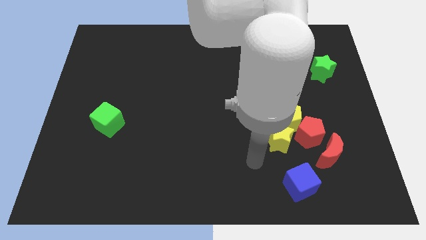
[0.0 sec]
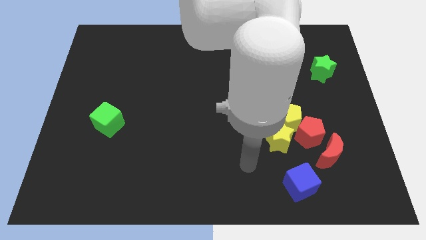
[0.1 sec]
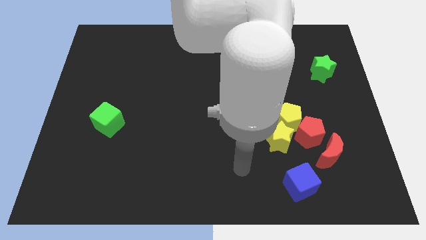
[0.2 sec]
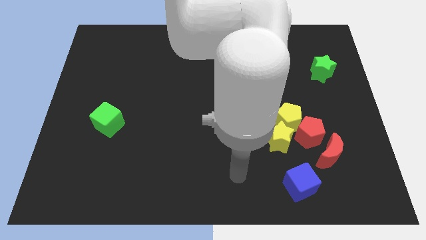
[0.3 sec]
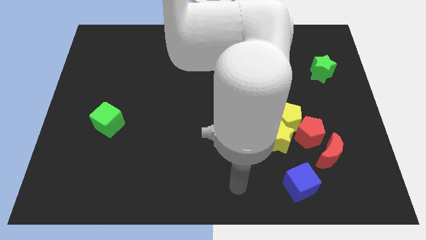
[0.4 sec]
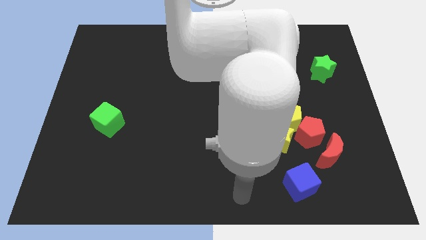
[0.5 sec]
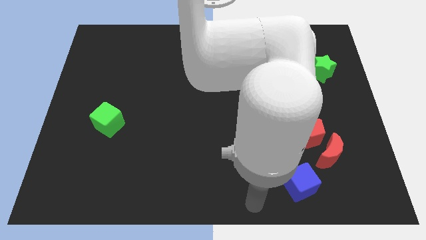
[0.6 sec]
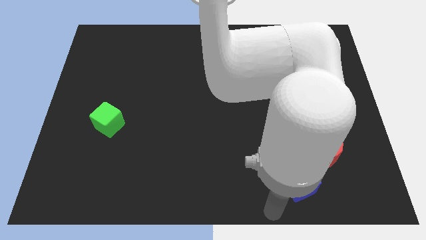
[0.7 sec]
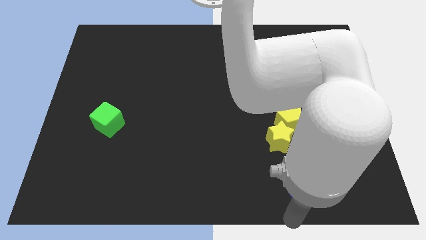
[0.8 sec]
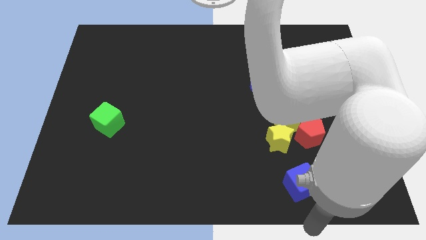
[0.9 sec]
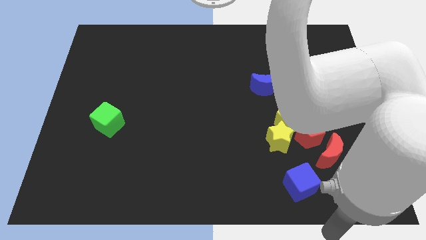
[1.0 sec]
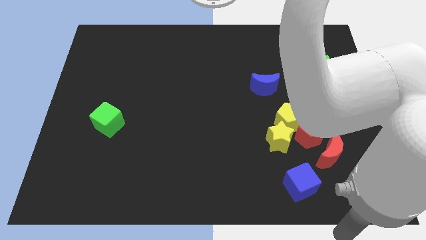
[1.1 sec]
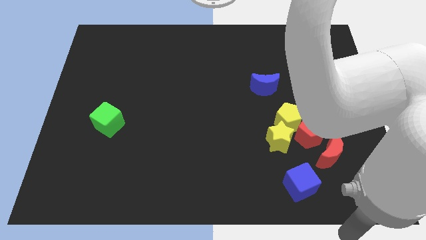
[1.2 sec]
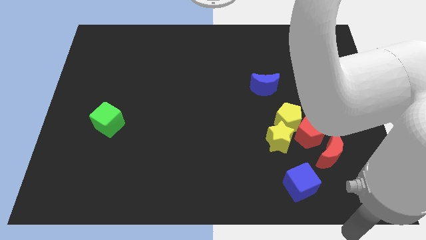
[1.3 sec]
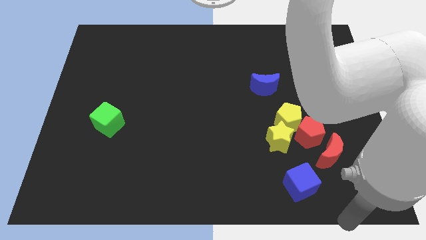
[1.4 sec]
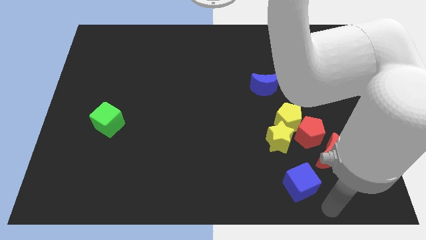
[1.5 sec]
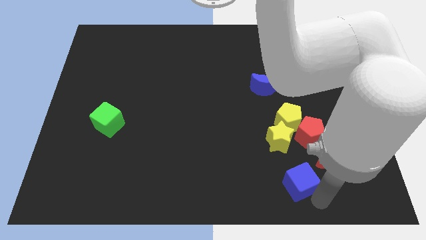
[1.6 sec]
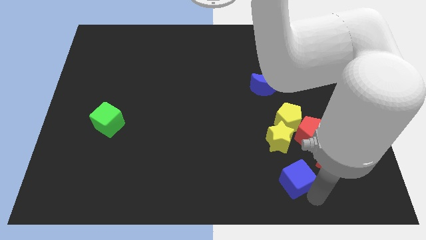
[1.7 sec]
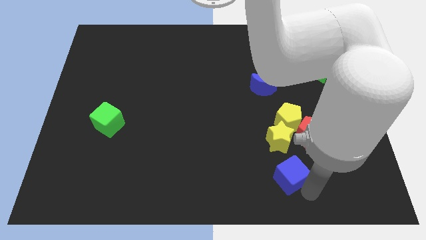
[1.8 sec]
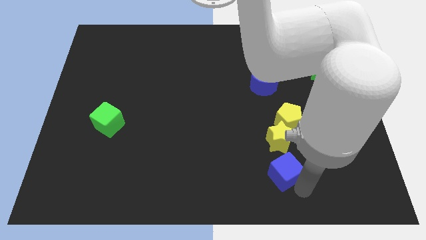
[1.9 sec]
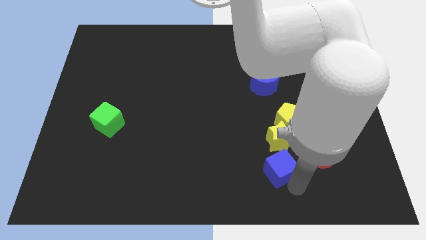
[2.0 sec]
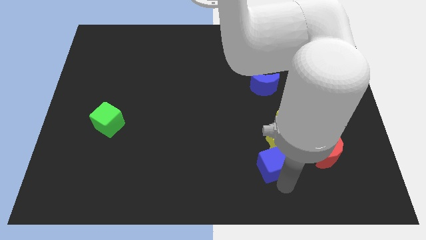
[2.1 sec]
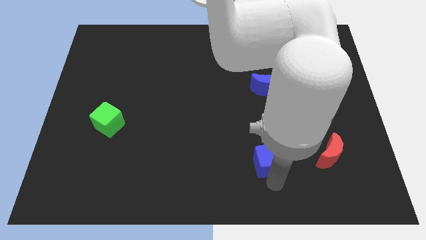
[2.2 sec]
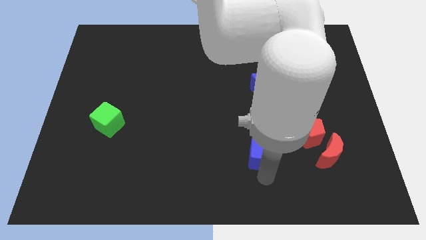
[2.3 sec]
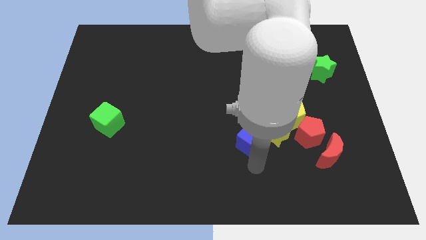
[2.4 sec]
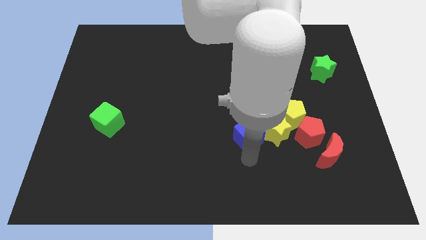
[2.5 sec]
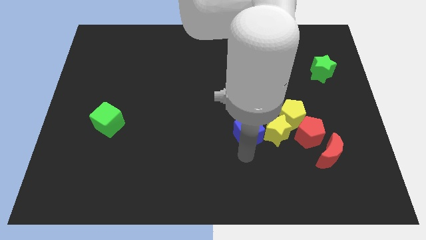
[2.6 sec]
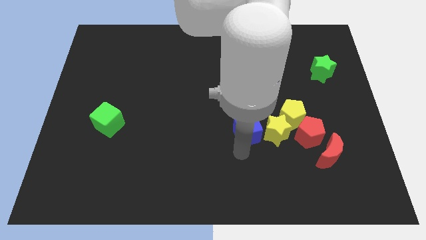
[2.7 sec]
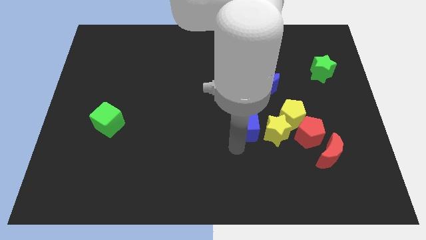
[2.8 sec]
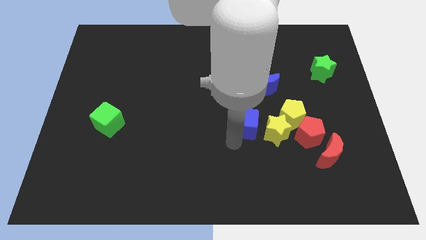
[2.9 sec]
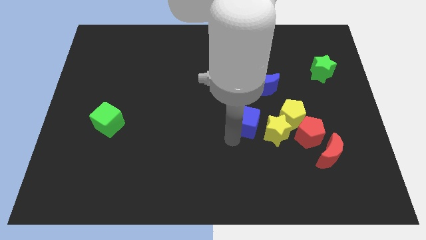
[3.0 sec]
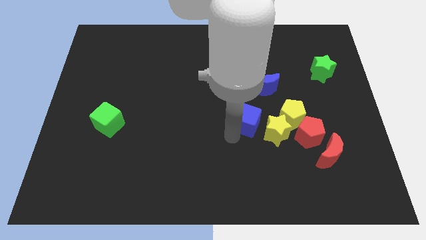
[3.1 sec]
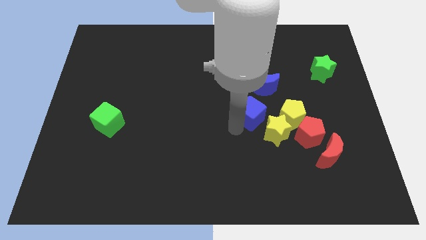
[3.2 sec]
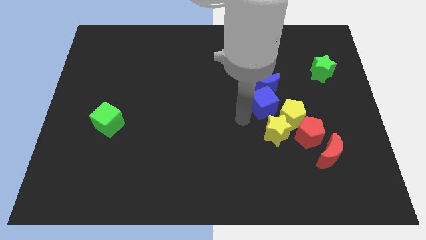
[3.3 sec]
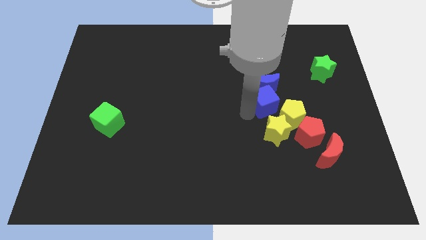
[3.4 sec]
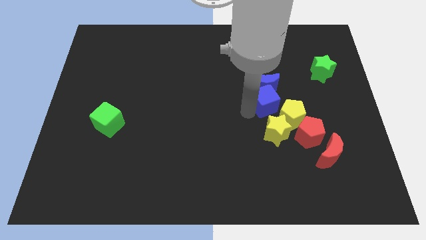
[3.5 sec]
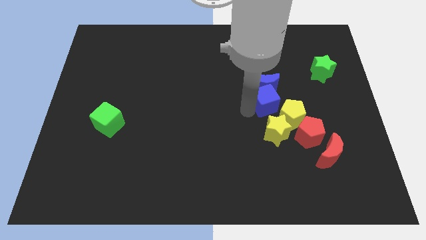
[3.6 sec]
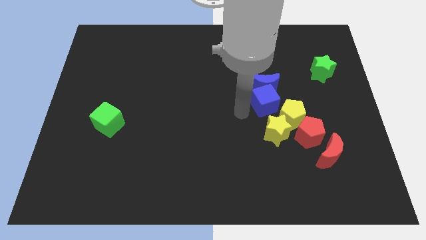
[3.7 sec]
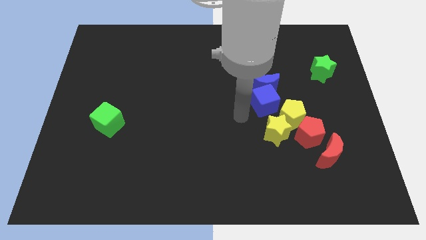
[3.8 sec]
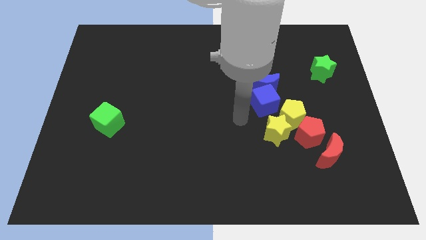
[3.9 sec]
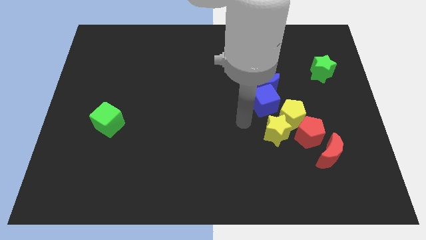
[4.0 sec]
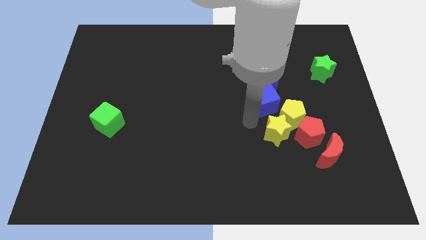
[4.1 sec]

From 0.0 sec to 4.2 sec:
place the blue cube below the blue crescent

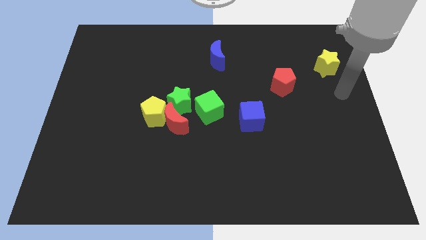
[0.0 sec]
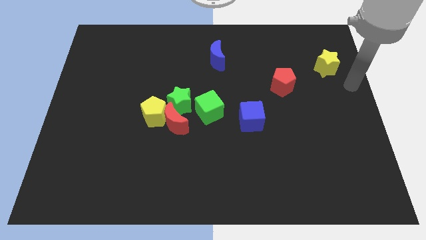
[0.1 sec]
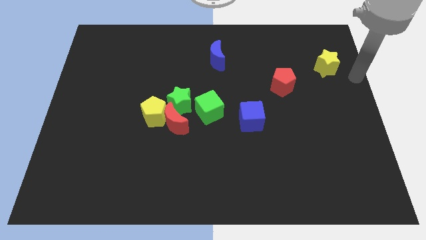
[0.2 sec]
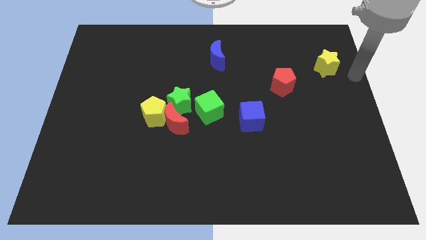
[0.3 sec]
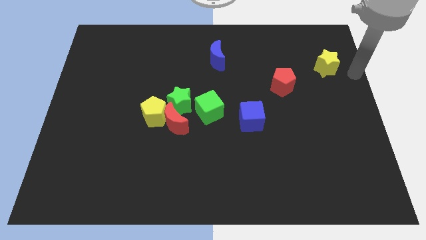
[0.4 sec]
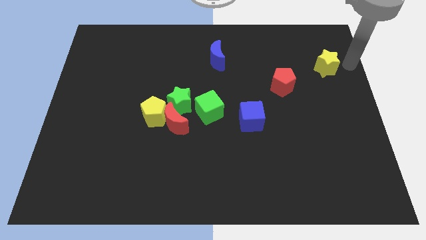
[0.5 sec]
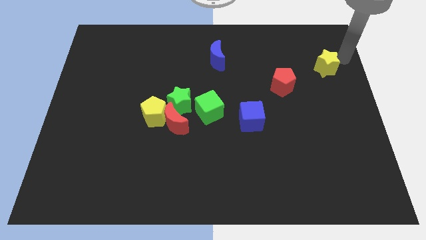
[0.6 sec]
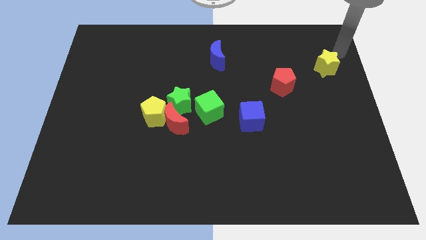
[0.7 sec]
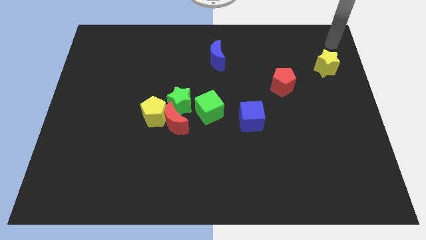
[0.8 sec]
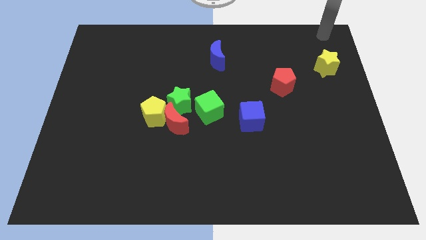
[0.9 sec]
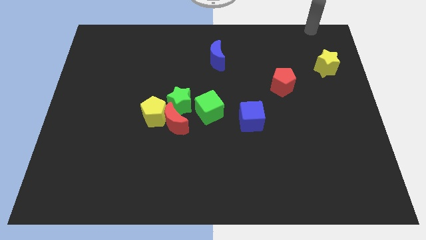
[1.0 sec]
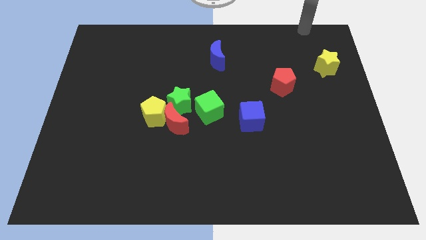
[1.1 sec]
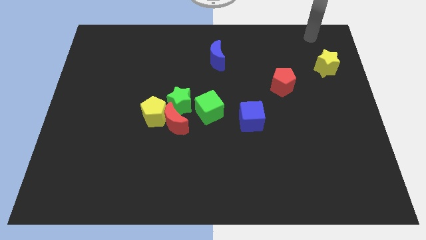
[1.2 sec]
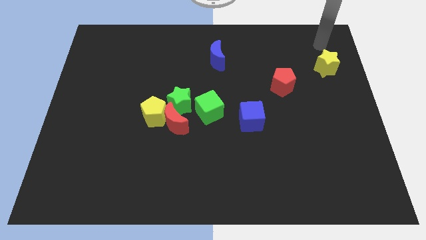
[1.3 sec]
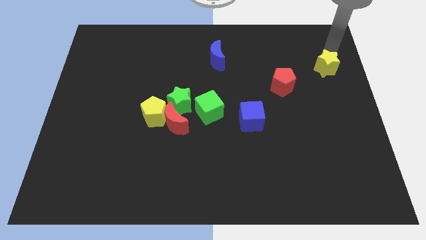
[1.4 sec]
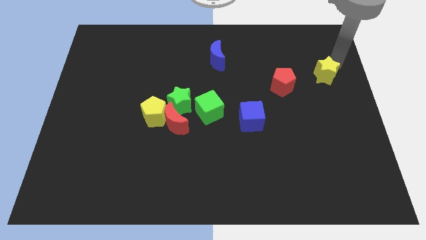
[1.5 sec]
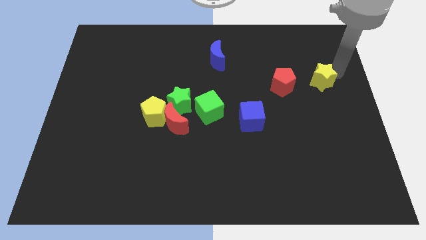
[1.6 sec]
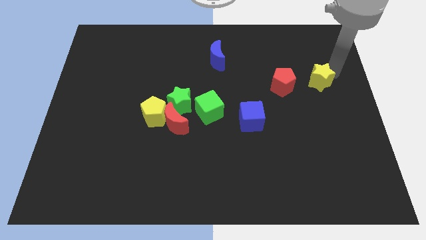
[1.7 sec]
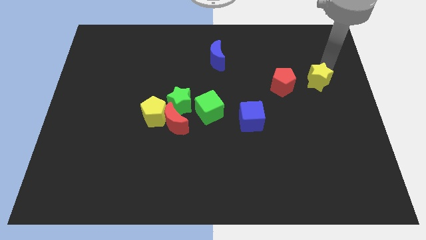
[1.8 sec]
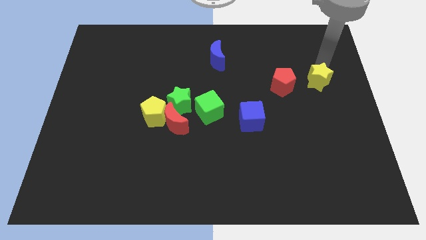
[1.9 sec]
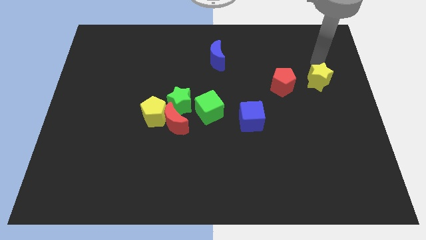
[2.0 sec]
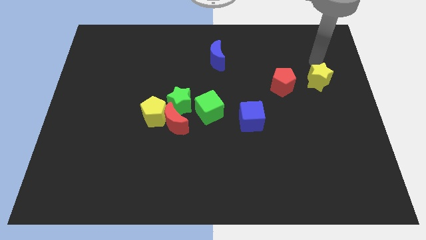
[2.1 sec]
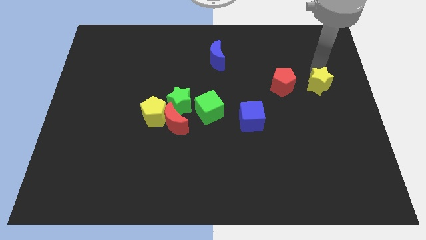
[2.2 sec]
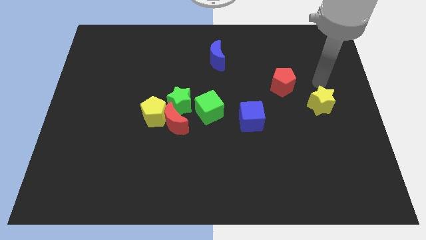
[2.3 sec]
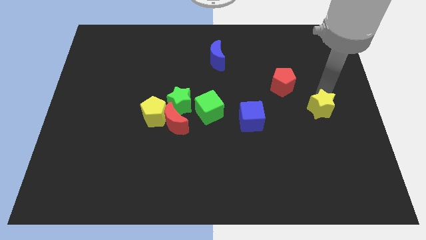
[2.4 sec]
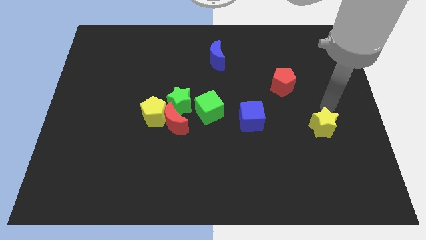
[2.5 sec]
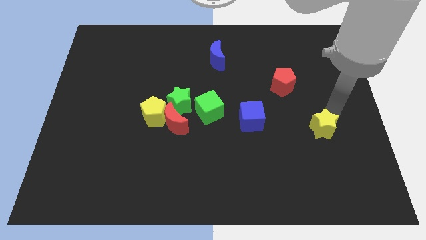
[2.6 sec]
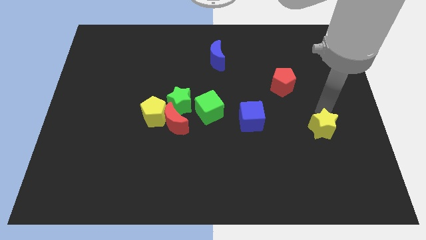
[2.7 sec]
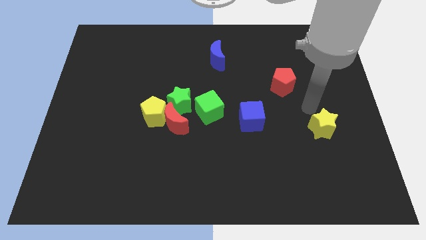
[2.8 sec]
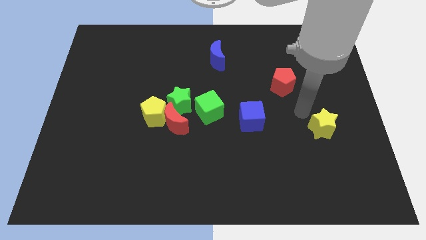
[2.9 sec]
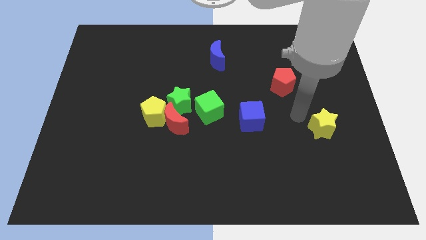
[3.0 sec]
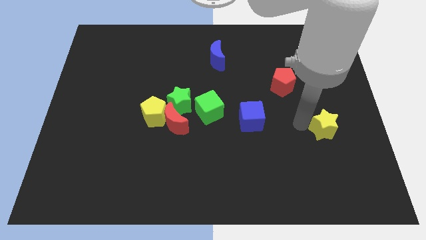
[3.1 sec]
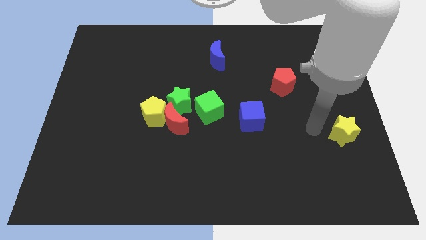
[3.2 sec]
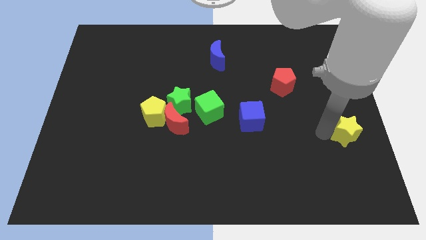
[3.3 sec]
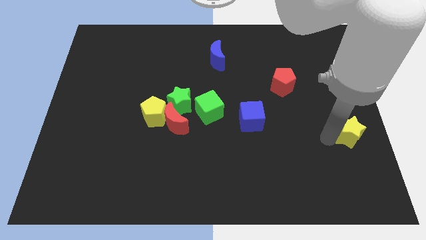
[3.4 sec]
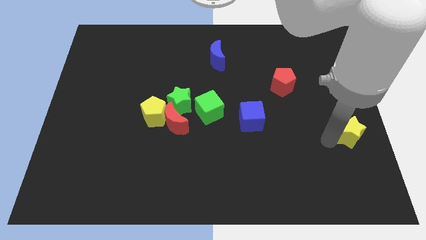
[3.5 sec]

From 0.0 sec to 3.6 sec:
push the yellow star towards the center right of the board

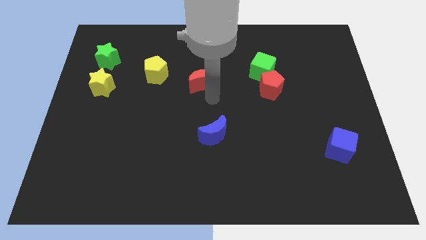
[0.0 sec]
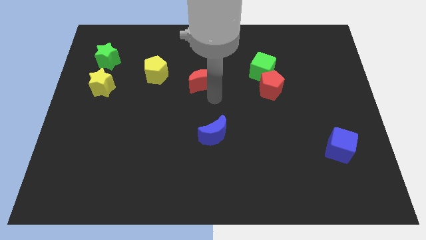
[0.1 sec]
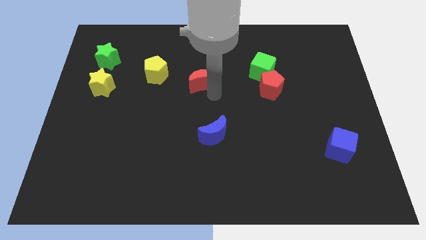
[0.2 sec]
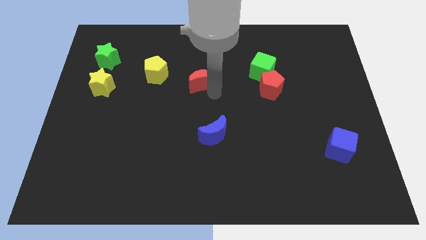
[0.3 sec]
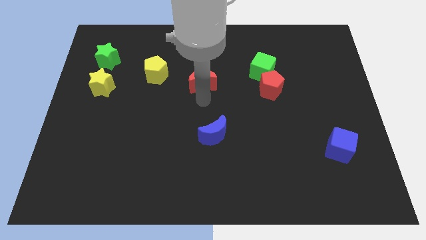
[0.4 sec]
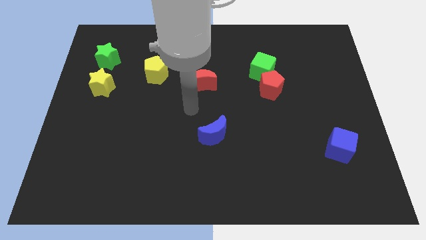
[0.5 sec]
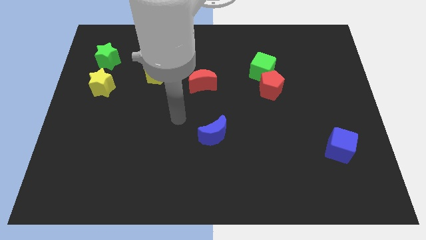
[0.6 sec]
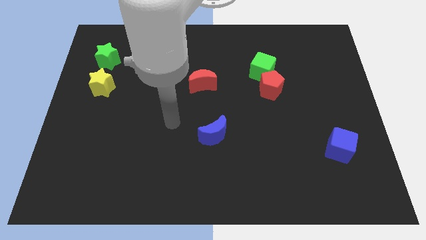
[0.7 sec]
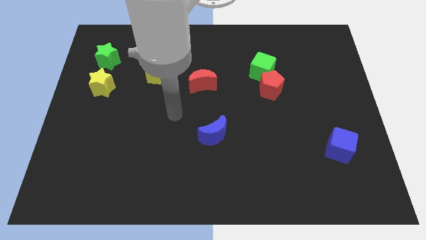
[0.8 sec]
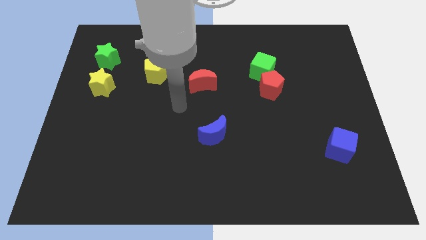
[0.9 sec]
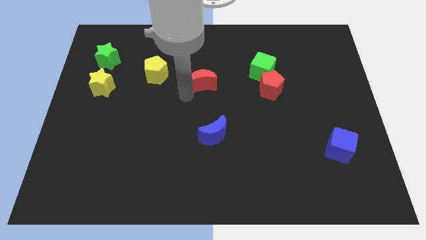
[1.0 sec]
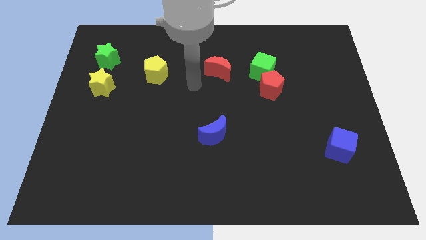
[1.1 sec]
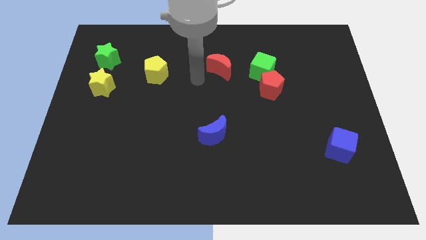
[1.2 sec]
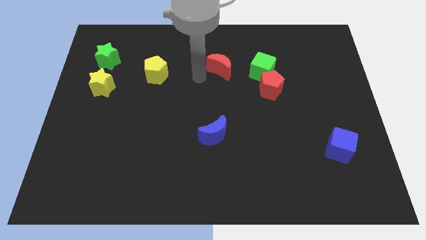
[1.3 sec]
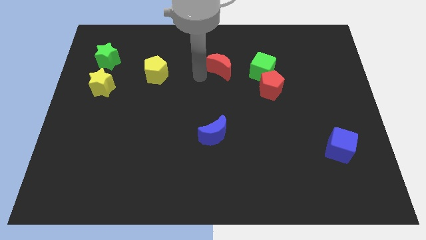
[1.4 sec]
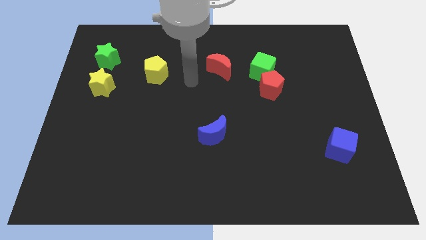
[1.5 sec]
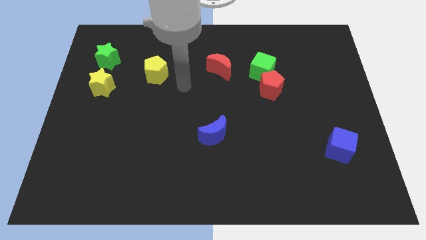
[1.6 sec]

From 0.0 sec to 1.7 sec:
move the red crescent left to the green cube
